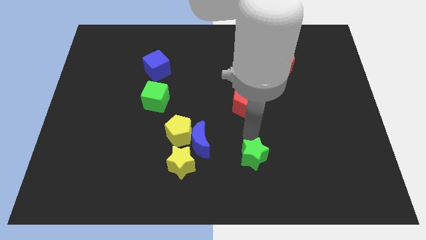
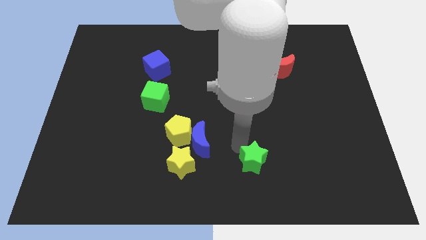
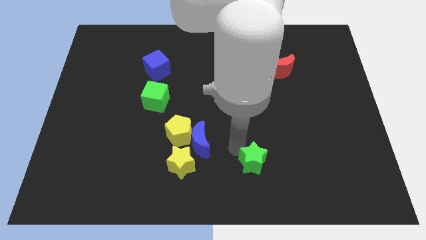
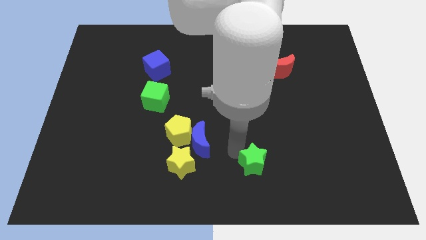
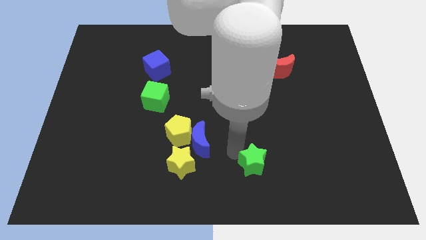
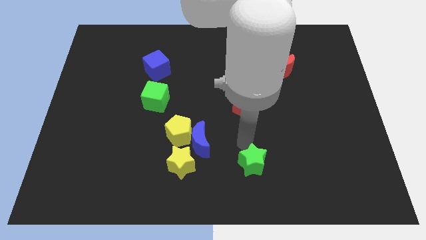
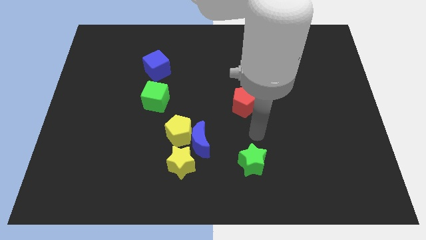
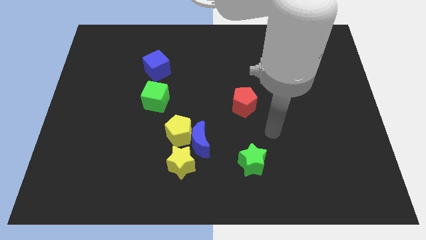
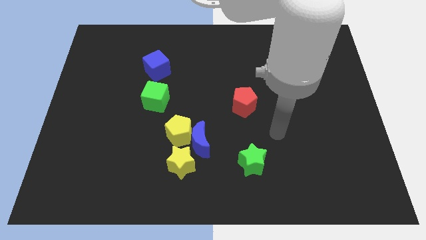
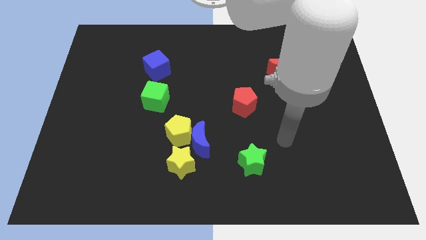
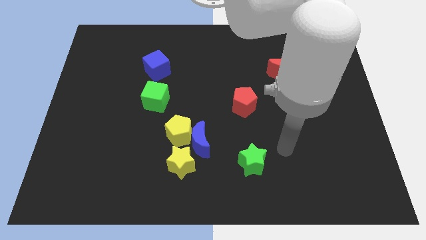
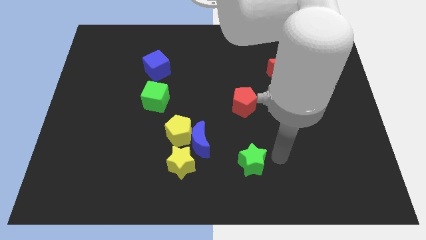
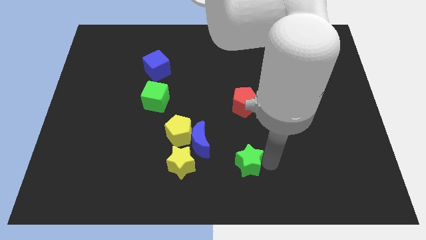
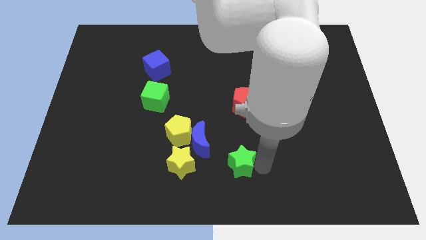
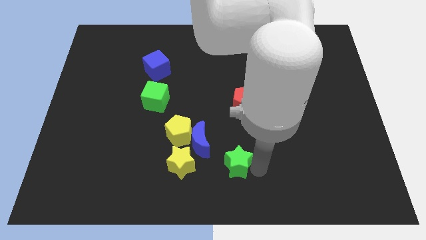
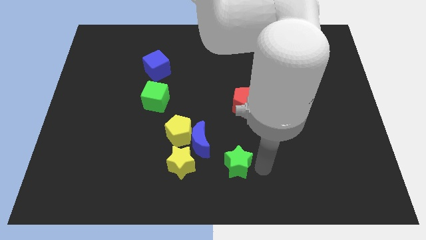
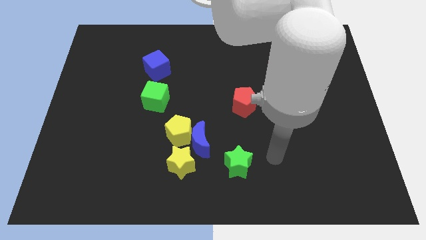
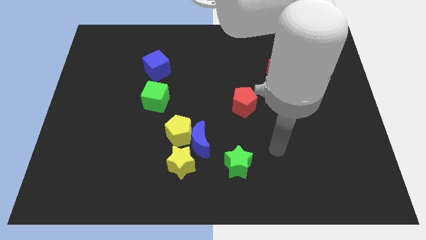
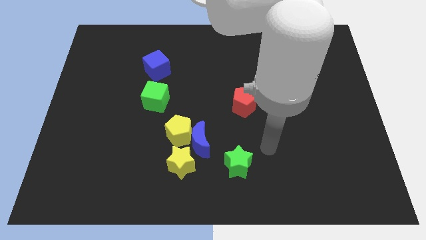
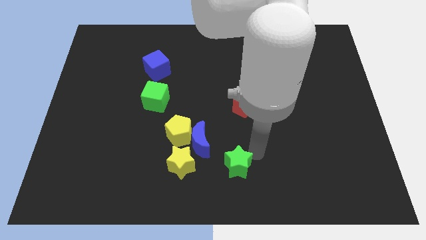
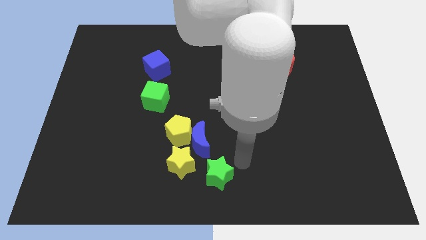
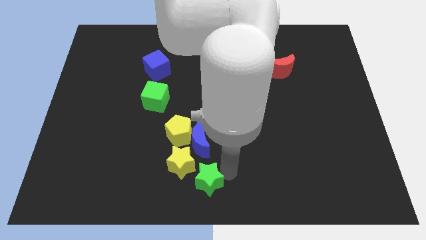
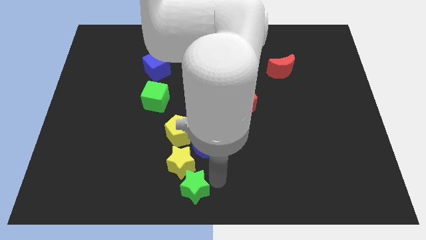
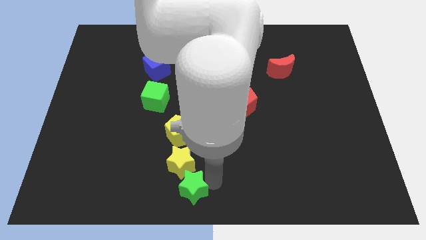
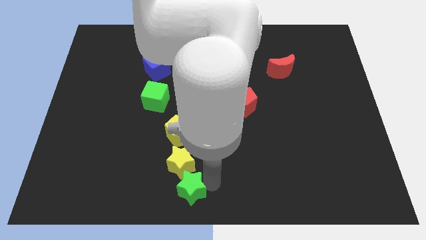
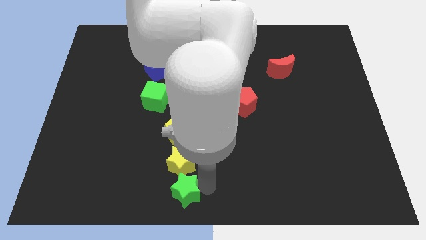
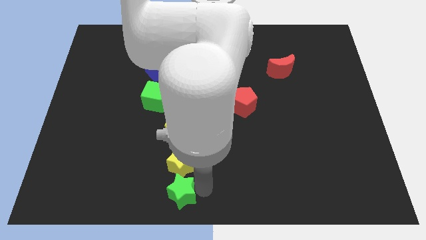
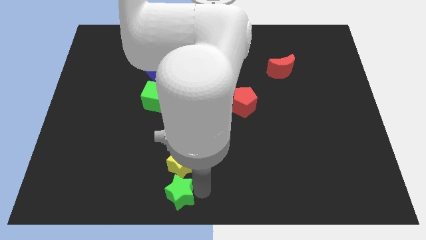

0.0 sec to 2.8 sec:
move the green star below the yellow star

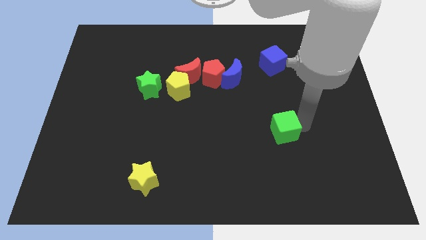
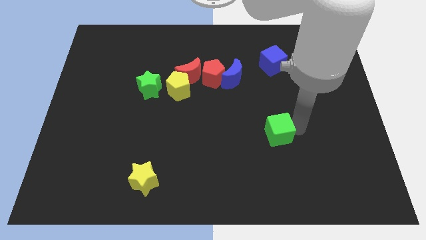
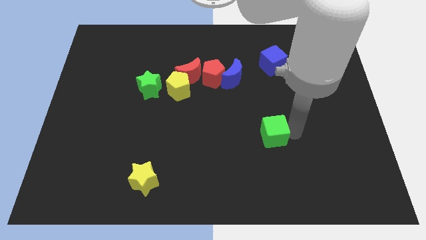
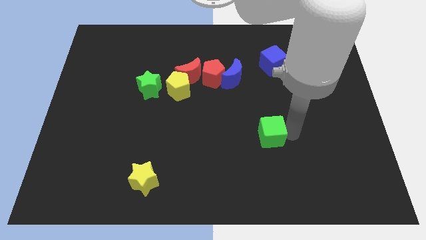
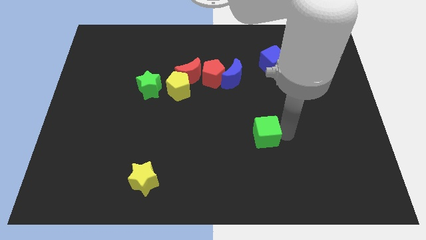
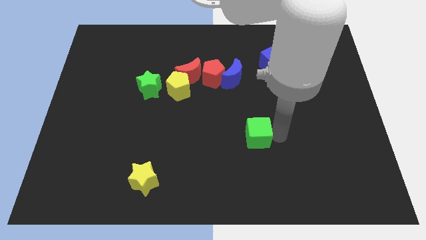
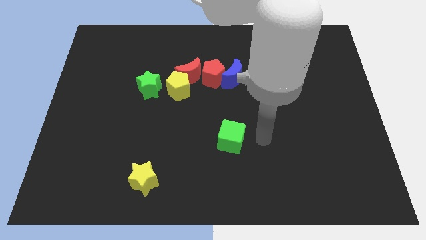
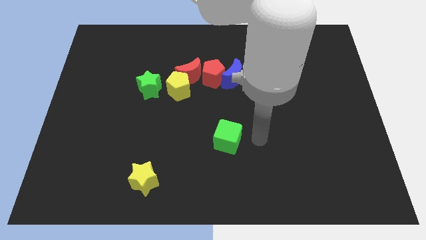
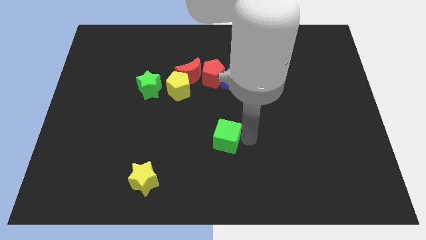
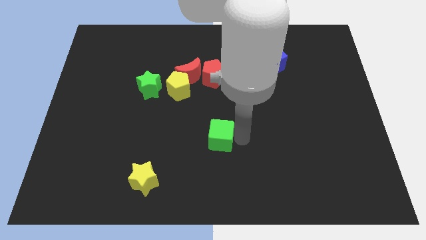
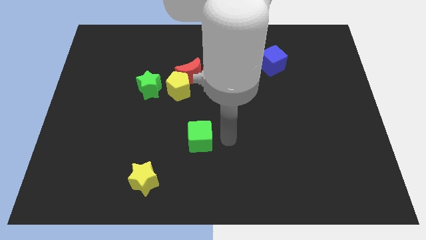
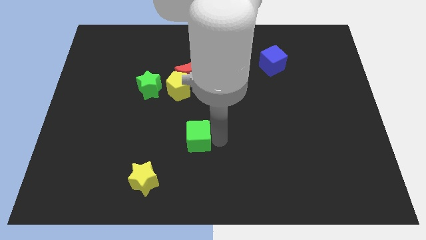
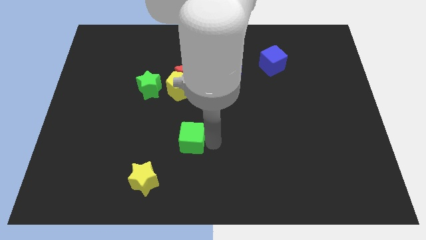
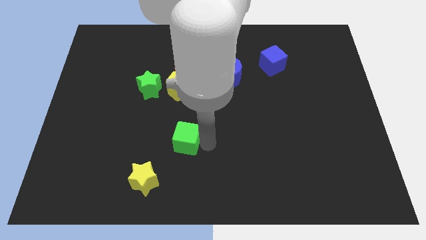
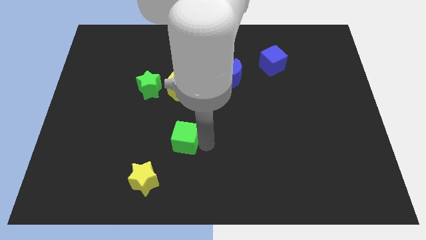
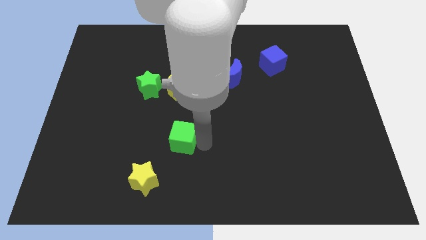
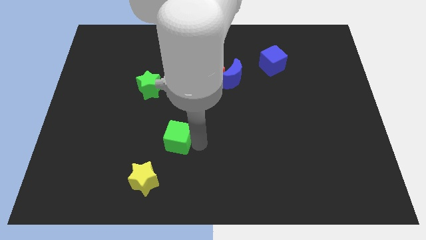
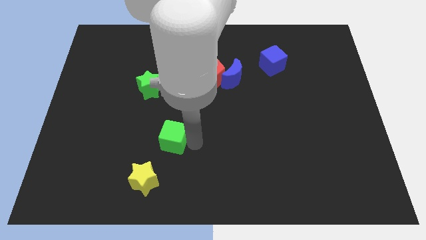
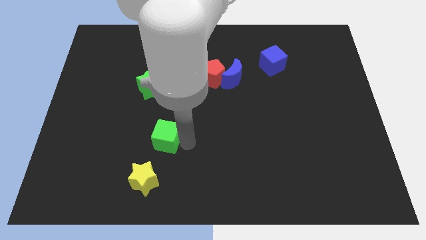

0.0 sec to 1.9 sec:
drag the green cube to the left side of the board

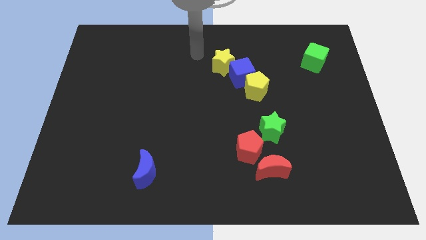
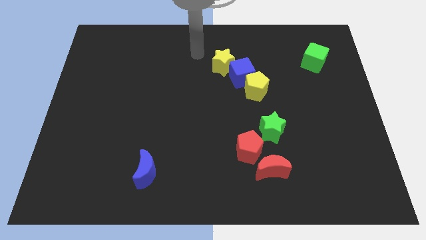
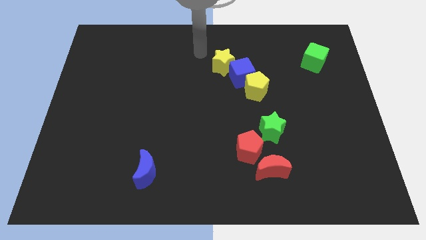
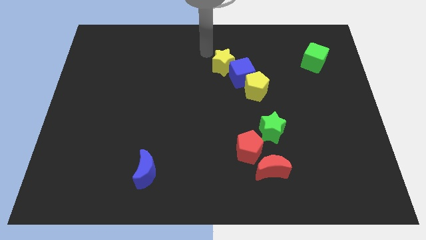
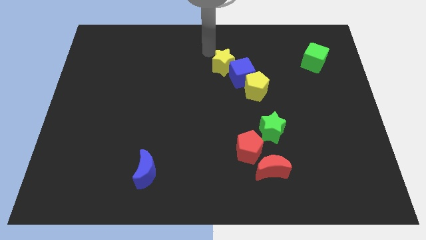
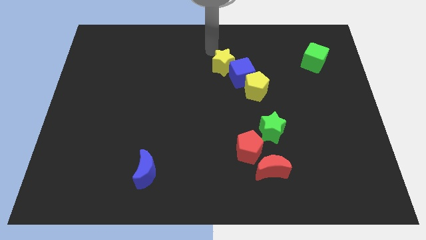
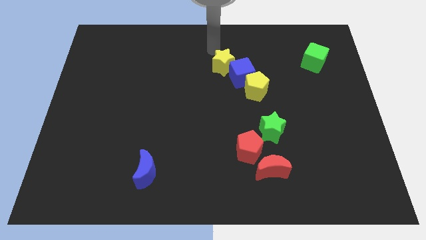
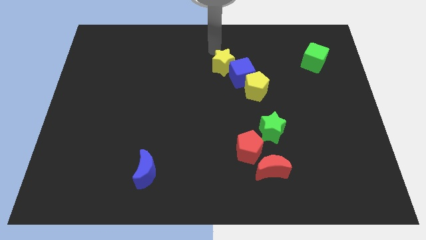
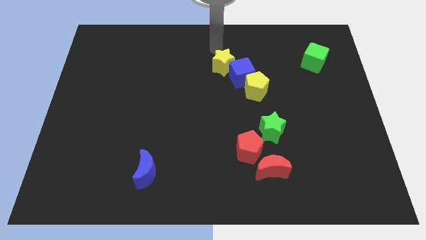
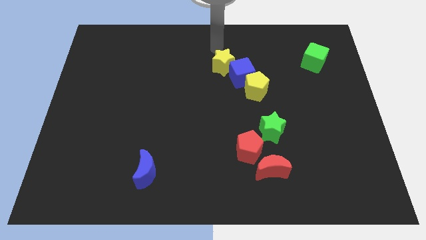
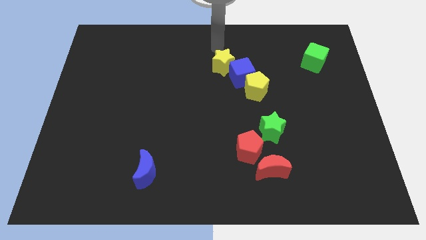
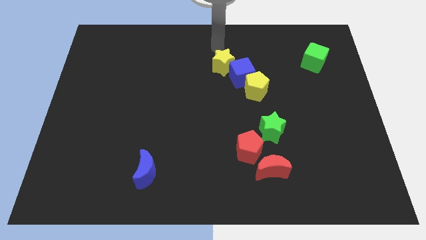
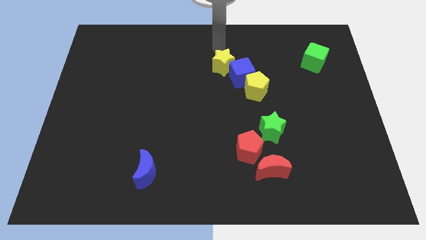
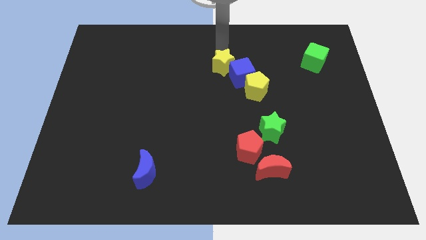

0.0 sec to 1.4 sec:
move your arm above the yellow star

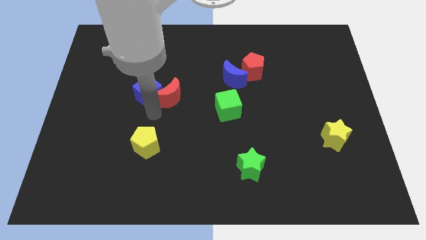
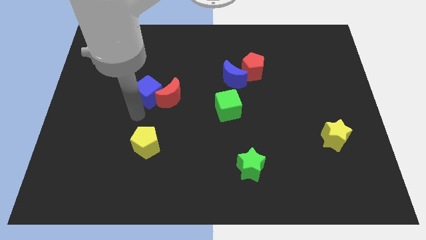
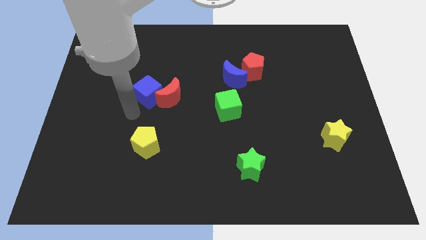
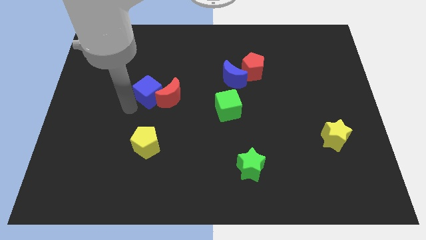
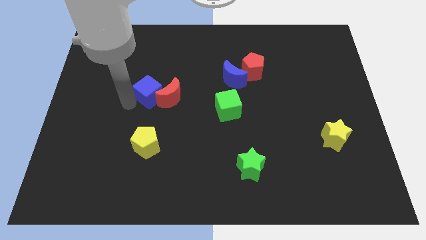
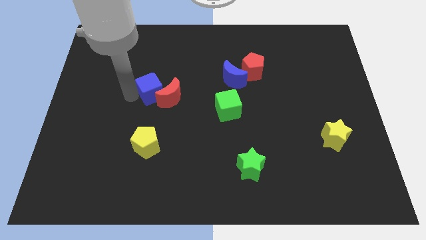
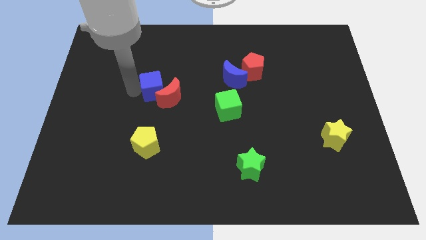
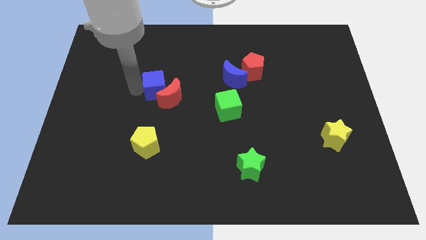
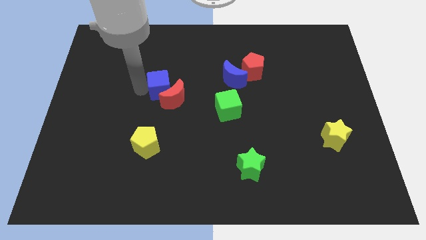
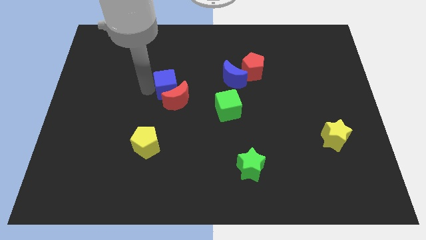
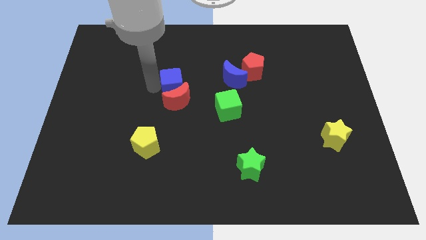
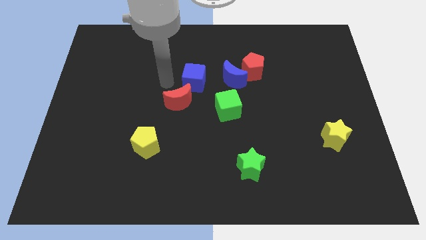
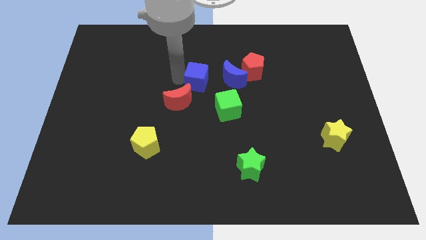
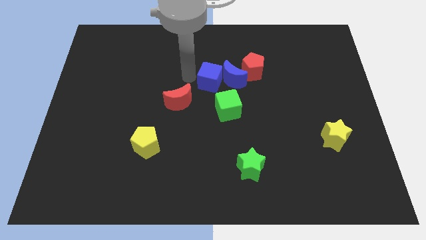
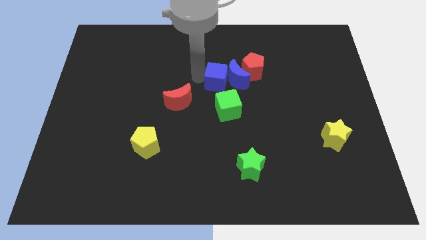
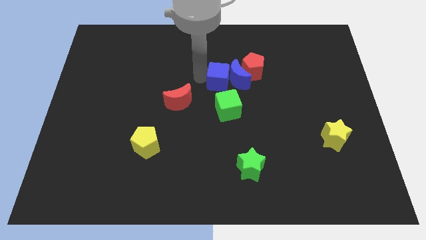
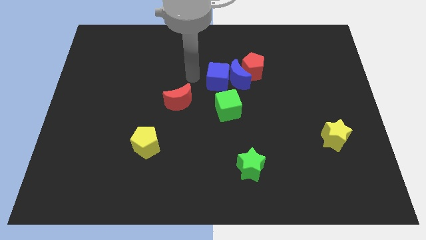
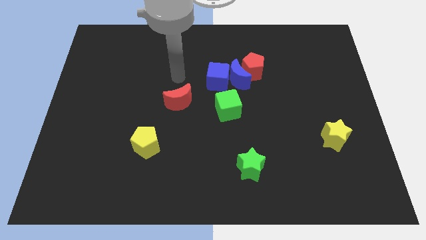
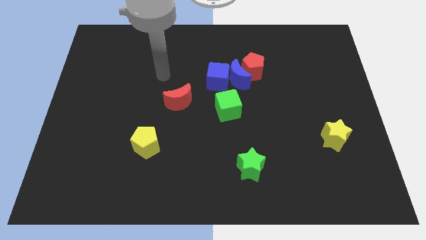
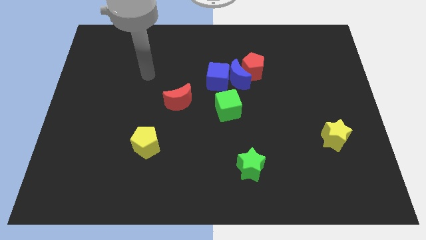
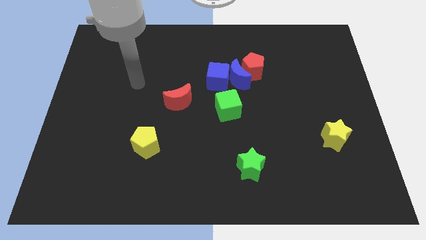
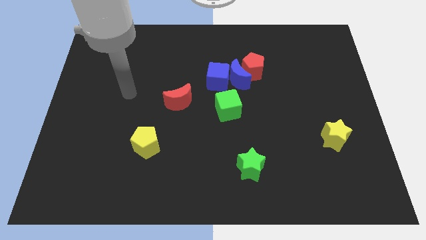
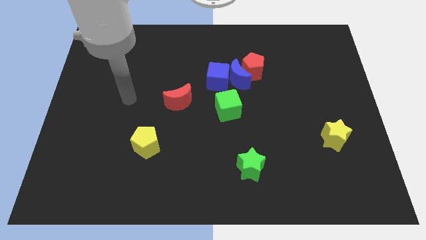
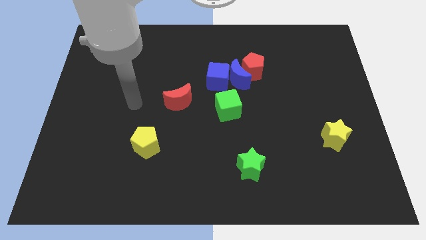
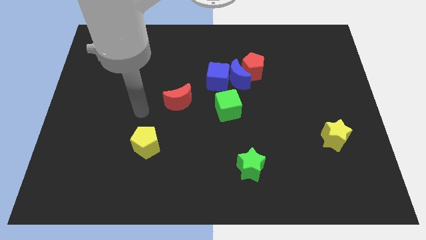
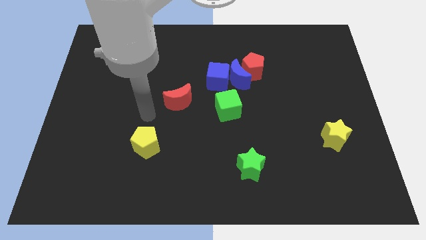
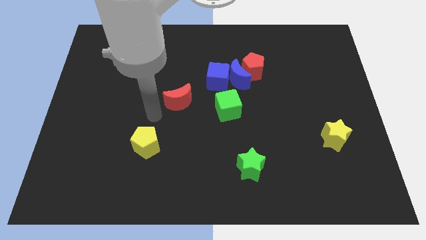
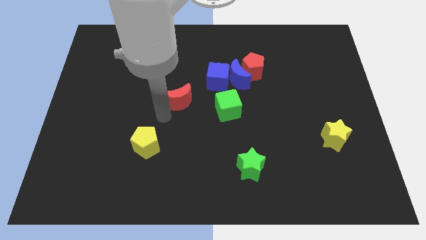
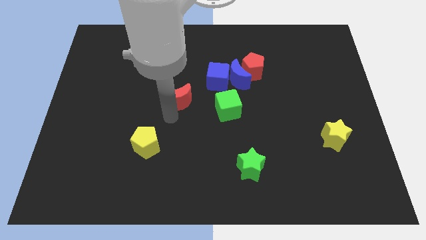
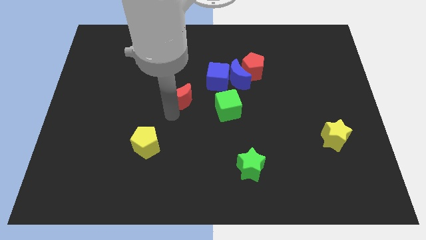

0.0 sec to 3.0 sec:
push blue cube into the blue moon
